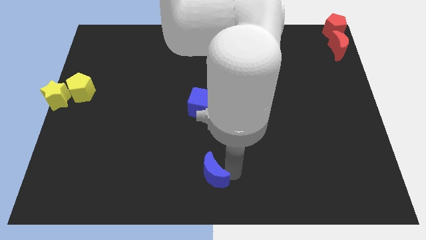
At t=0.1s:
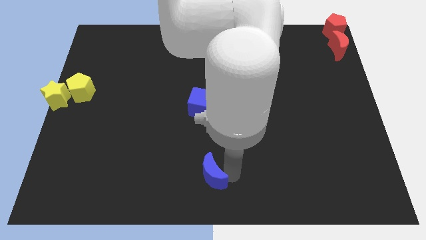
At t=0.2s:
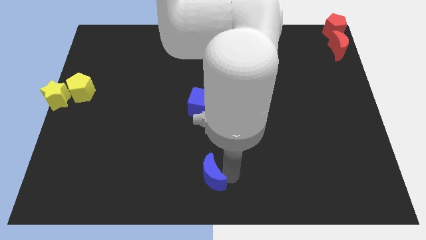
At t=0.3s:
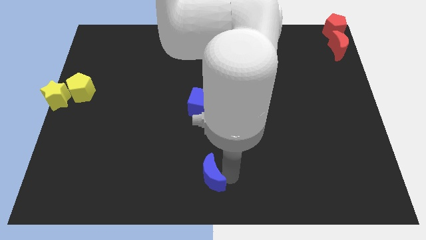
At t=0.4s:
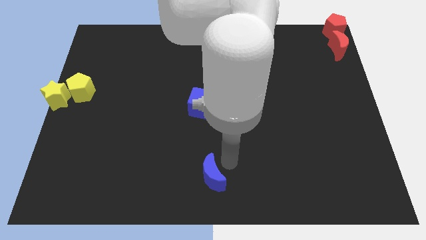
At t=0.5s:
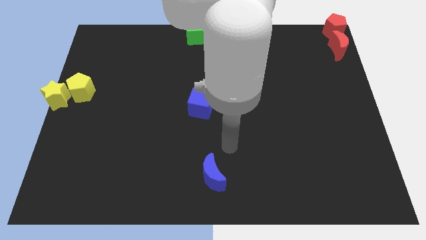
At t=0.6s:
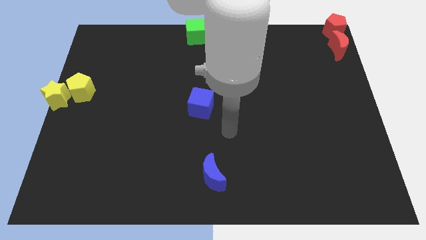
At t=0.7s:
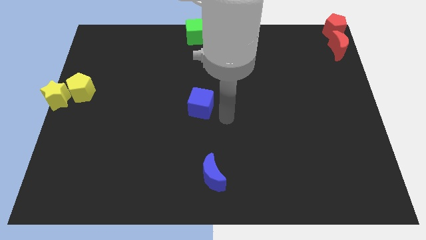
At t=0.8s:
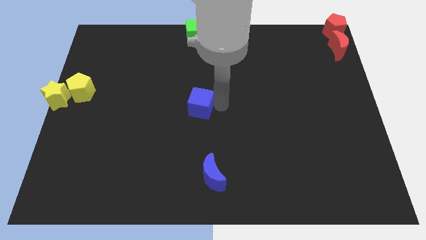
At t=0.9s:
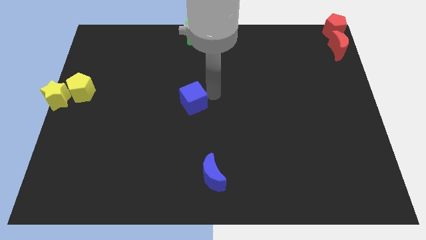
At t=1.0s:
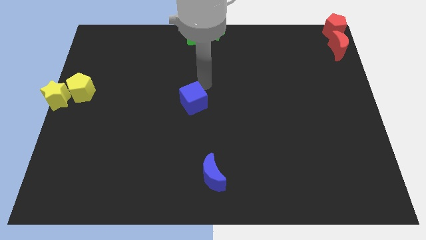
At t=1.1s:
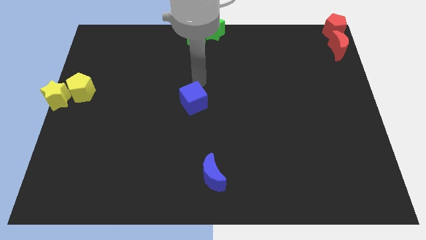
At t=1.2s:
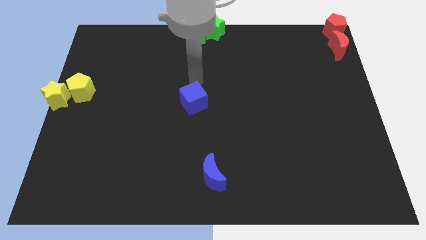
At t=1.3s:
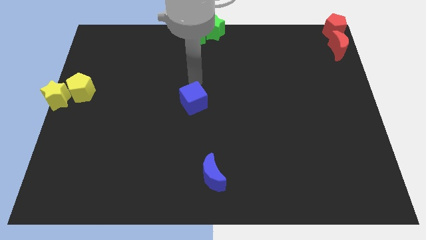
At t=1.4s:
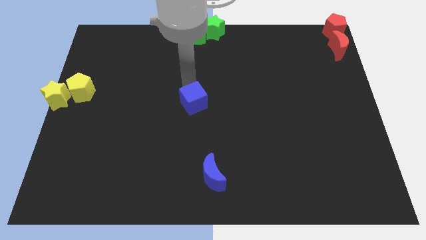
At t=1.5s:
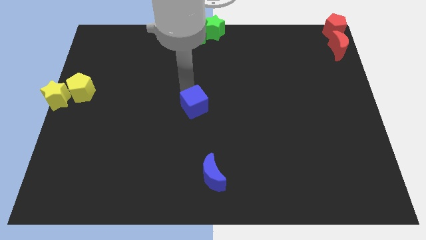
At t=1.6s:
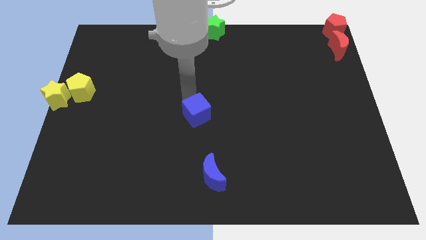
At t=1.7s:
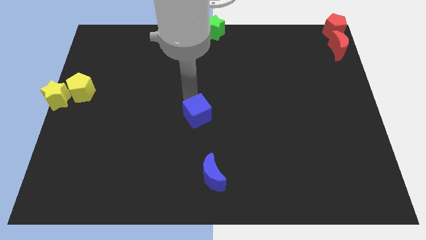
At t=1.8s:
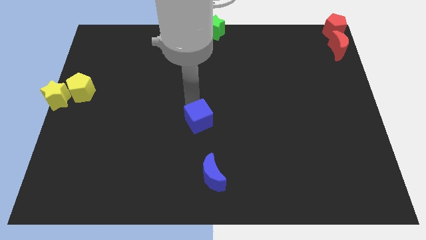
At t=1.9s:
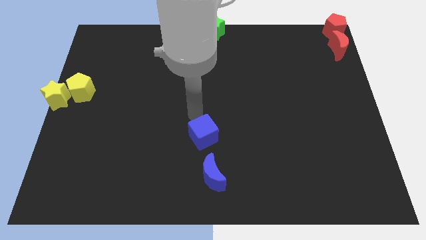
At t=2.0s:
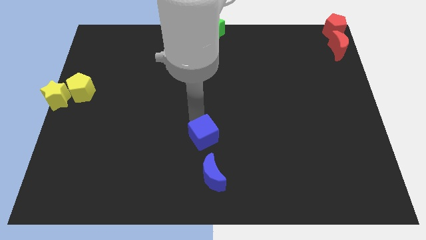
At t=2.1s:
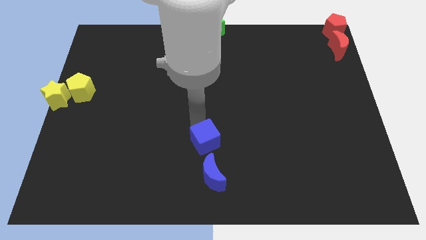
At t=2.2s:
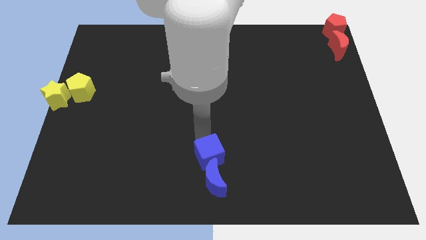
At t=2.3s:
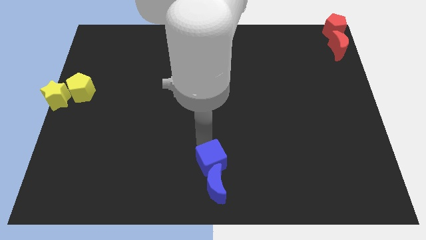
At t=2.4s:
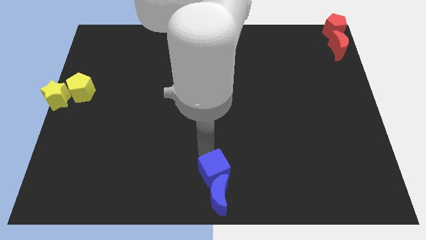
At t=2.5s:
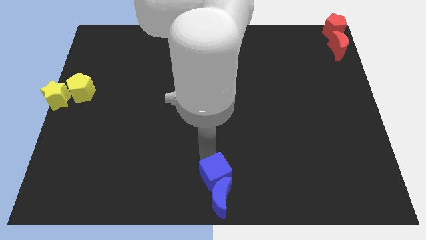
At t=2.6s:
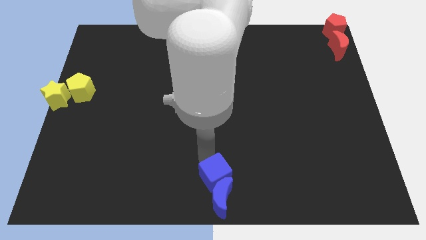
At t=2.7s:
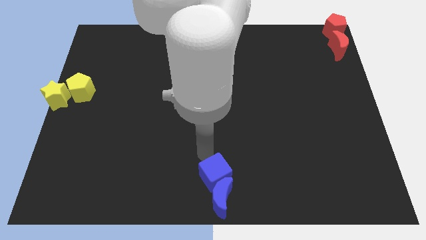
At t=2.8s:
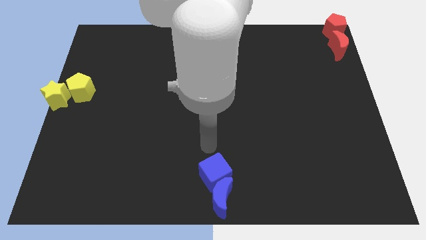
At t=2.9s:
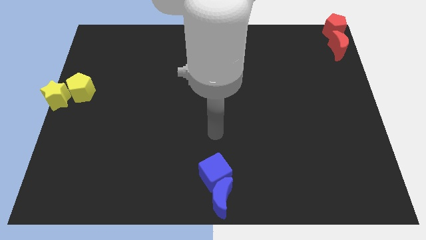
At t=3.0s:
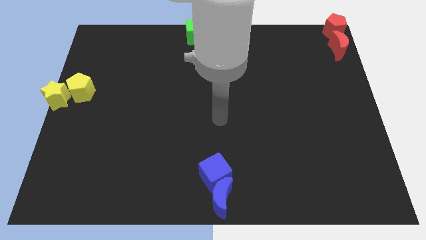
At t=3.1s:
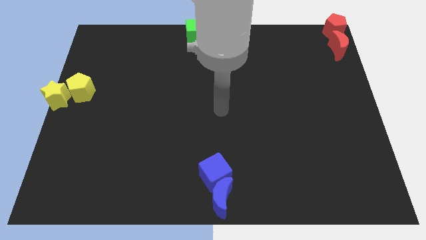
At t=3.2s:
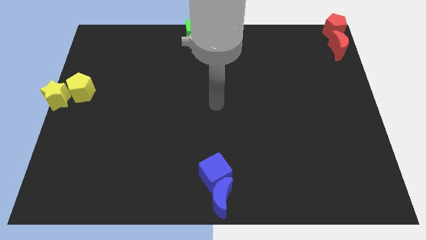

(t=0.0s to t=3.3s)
push blue cube towards the blue crescent

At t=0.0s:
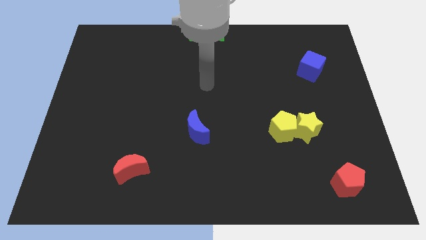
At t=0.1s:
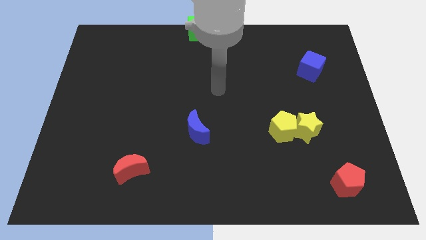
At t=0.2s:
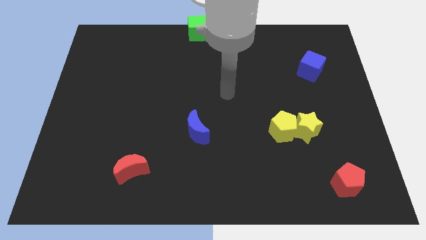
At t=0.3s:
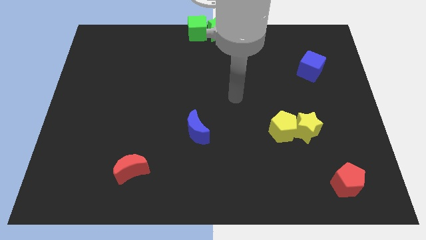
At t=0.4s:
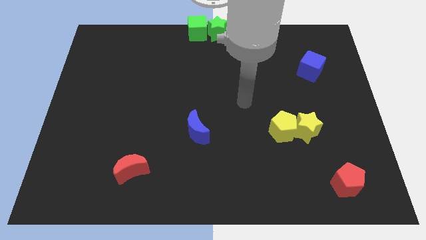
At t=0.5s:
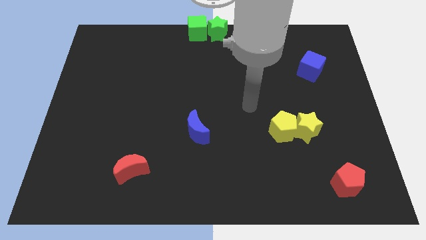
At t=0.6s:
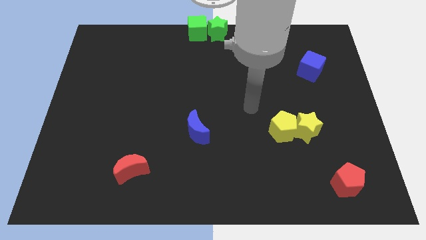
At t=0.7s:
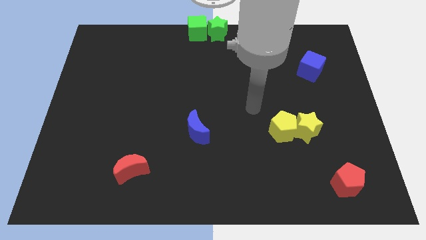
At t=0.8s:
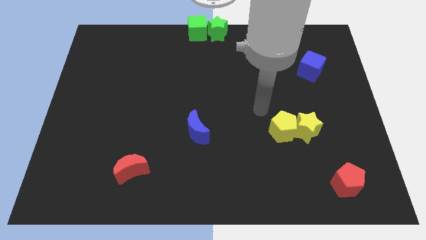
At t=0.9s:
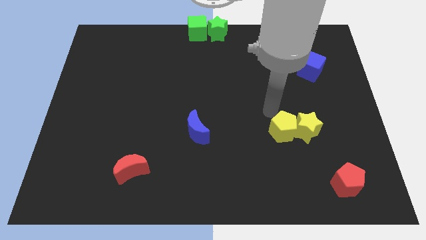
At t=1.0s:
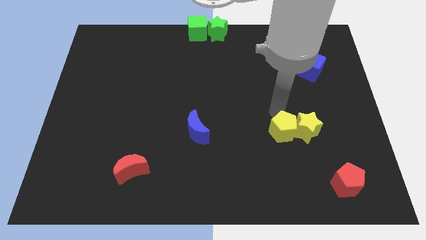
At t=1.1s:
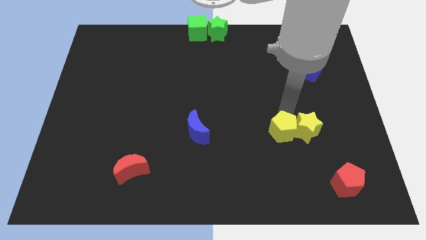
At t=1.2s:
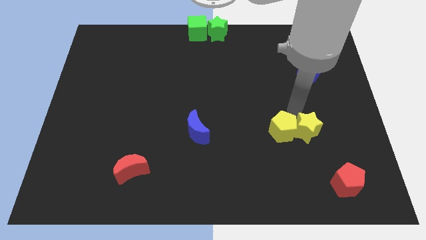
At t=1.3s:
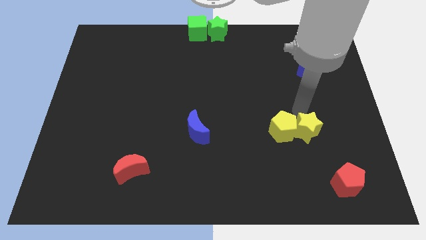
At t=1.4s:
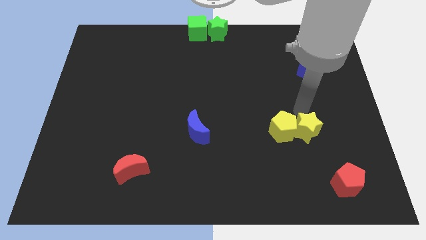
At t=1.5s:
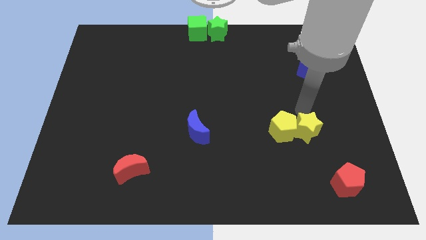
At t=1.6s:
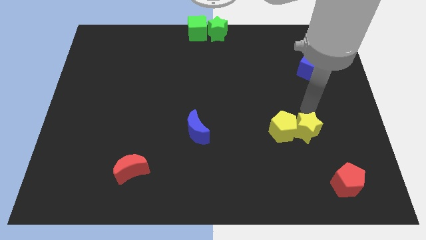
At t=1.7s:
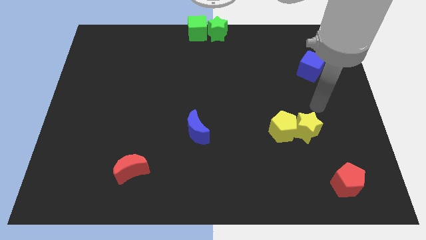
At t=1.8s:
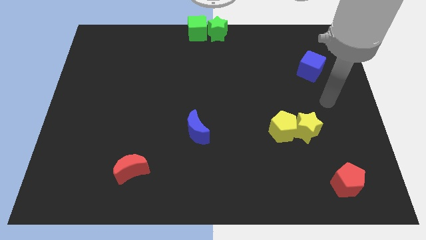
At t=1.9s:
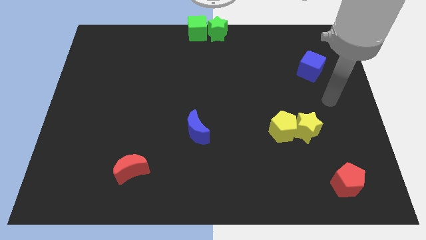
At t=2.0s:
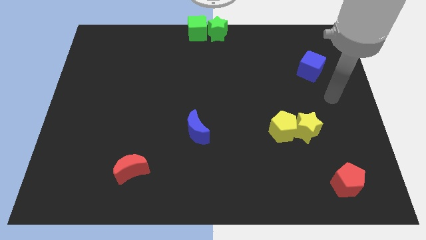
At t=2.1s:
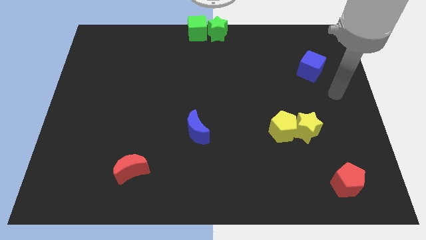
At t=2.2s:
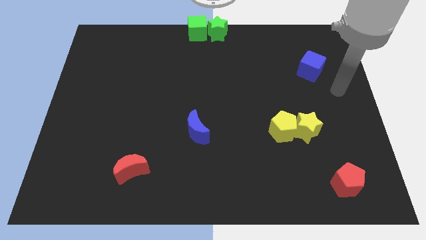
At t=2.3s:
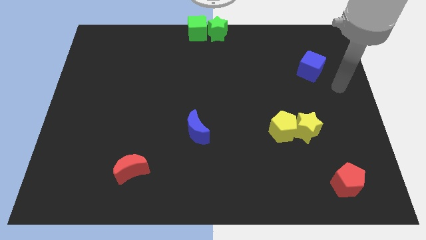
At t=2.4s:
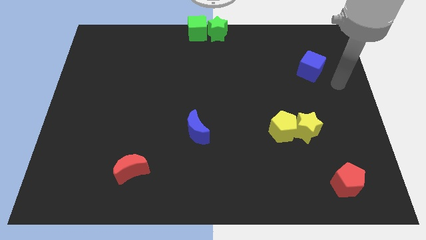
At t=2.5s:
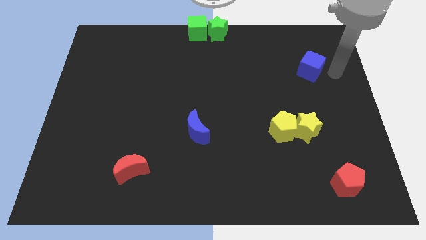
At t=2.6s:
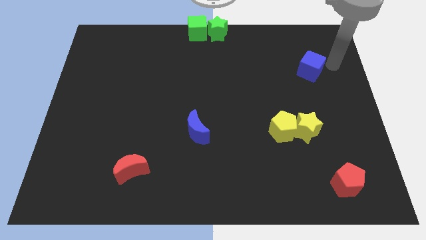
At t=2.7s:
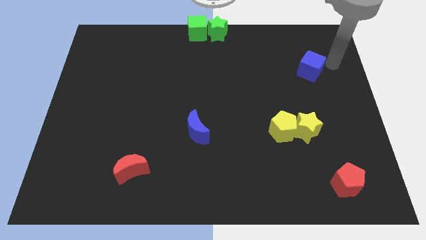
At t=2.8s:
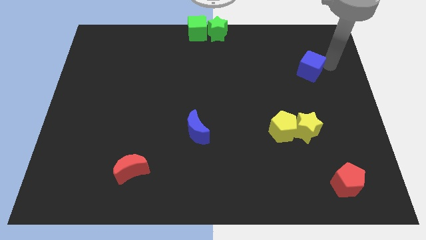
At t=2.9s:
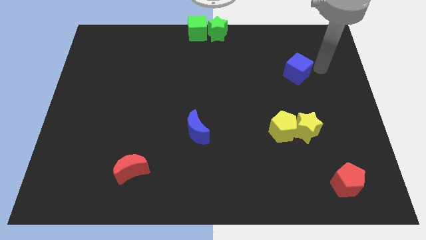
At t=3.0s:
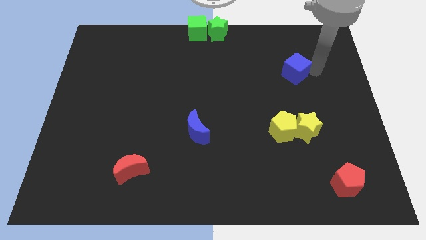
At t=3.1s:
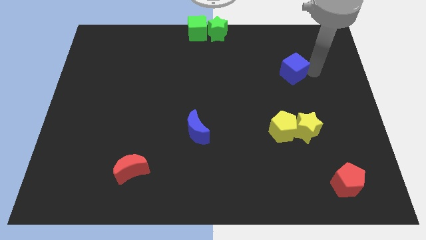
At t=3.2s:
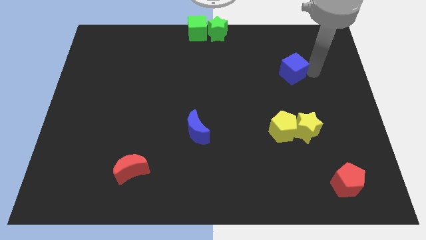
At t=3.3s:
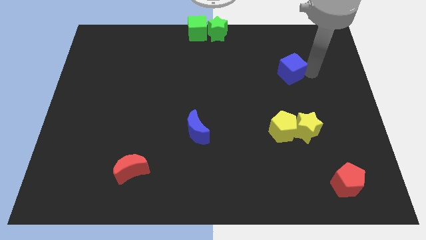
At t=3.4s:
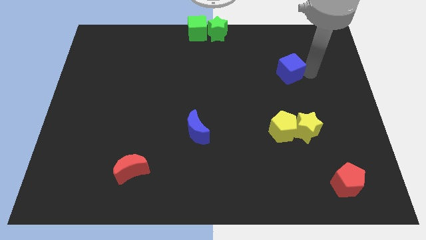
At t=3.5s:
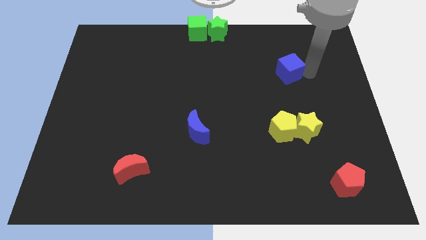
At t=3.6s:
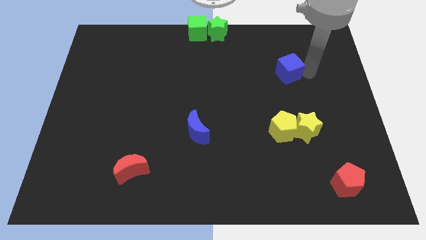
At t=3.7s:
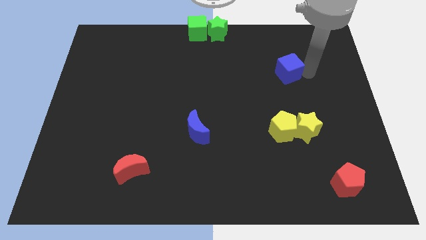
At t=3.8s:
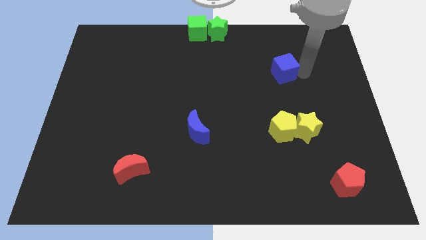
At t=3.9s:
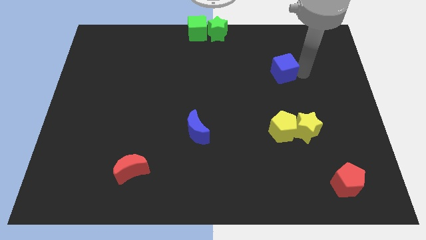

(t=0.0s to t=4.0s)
push blue cube above yellow pentagon

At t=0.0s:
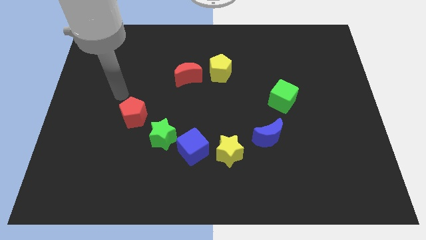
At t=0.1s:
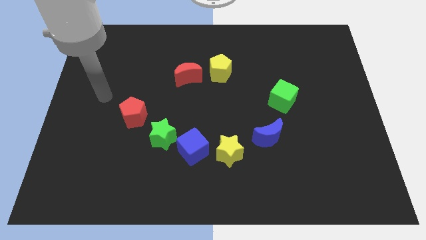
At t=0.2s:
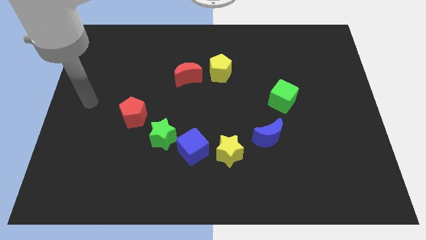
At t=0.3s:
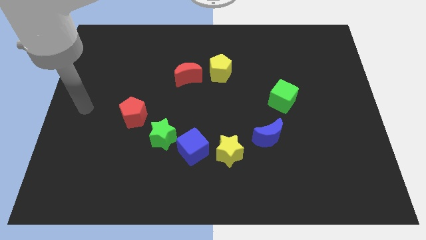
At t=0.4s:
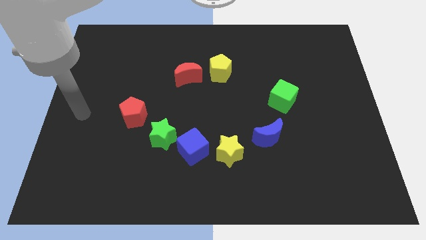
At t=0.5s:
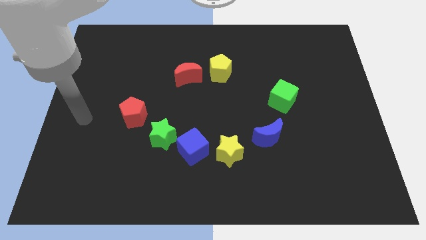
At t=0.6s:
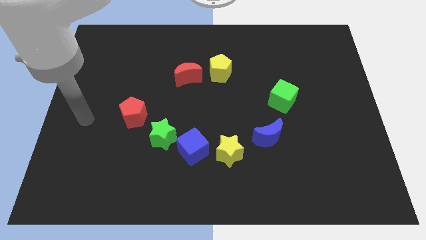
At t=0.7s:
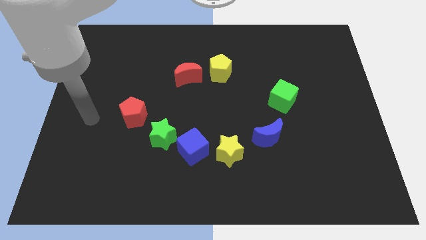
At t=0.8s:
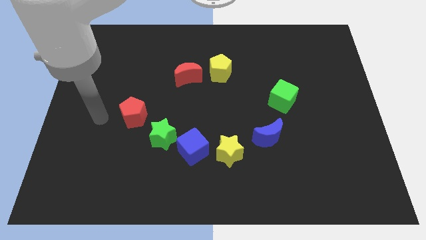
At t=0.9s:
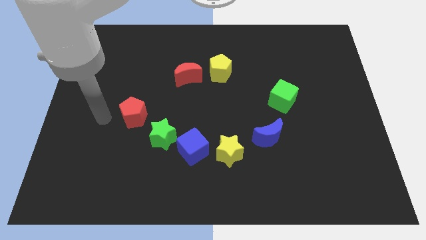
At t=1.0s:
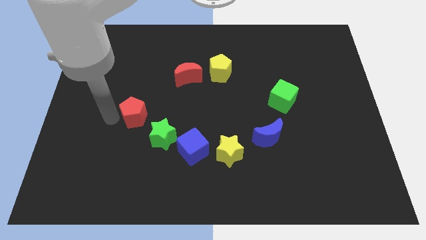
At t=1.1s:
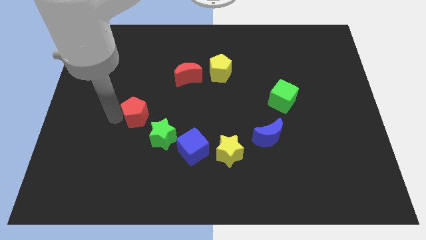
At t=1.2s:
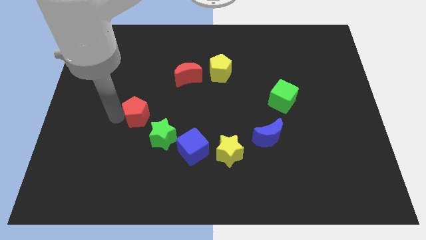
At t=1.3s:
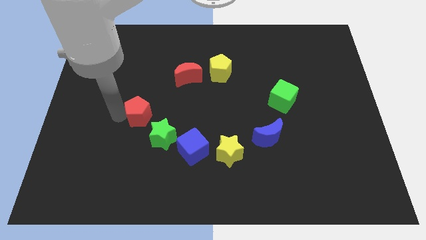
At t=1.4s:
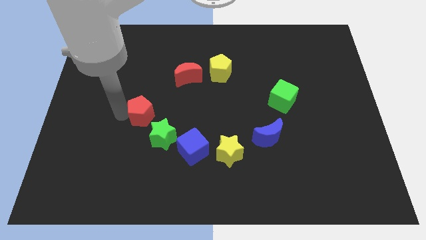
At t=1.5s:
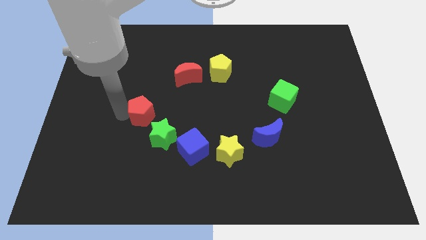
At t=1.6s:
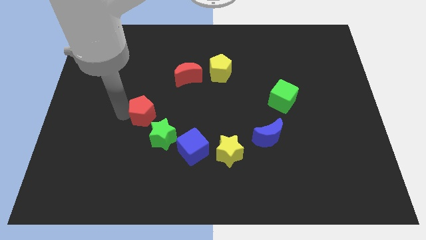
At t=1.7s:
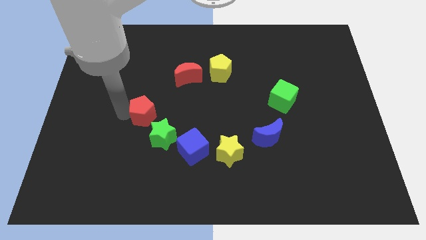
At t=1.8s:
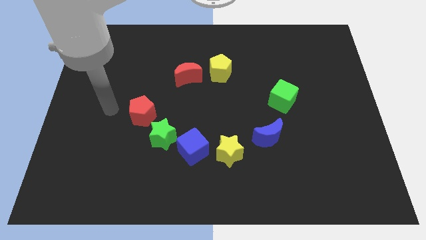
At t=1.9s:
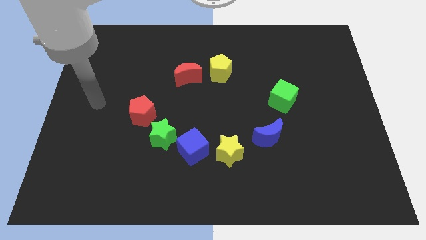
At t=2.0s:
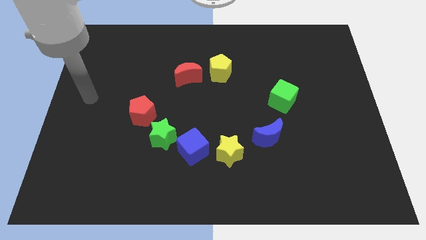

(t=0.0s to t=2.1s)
move the red pentagon slightly to the right
